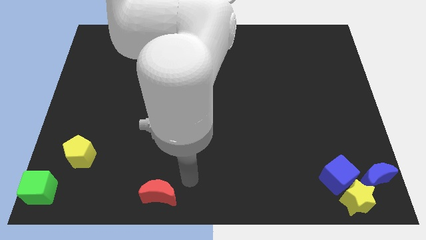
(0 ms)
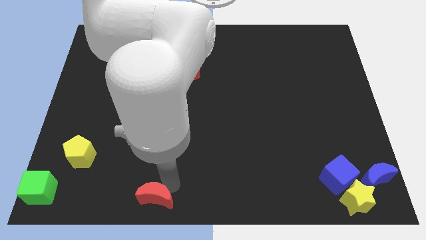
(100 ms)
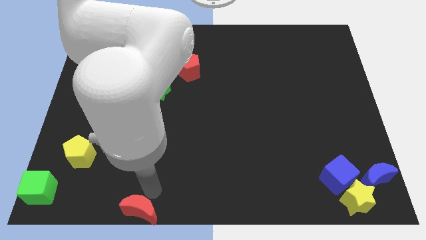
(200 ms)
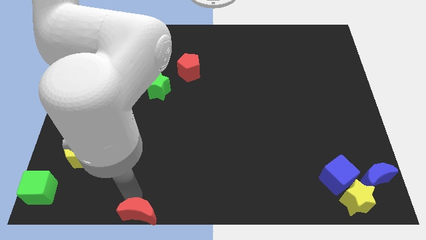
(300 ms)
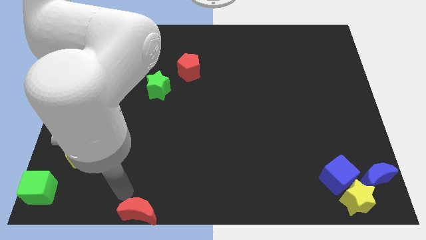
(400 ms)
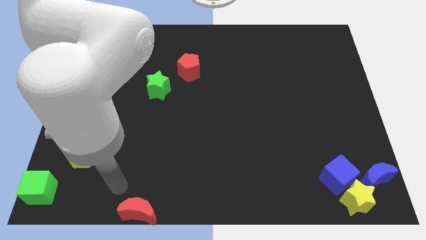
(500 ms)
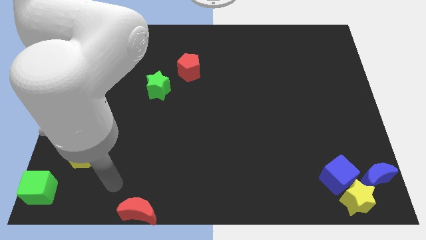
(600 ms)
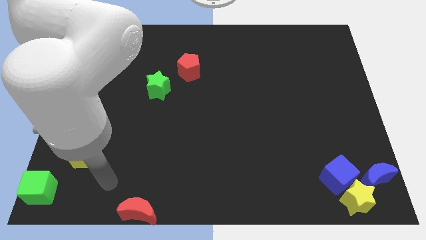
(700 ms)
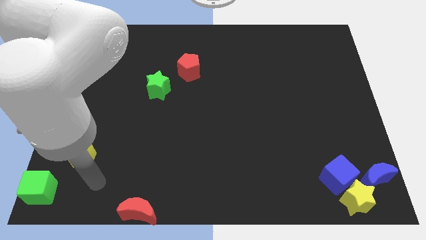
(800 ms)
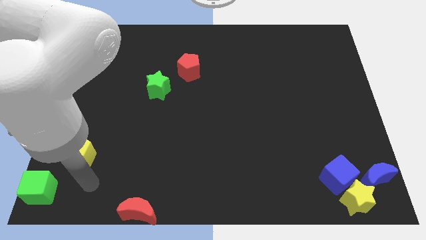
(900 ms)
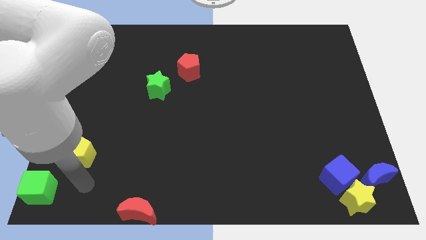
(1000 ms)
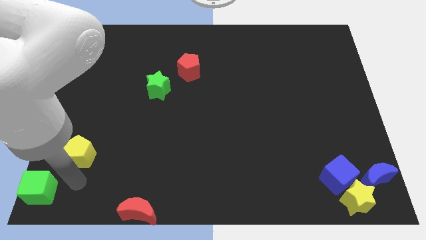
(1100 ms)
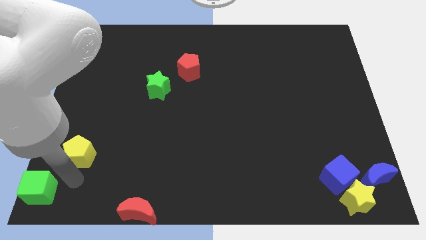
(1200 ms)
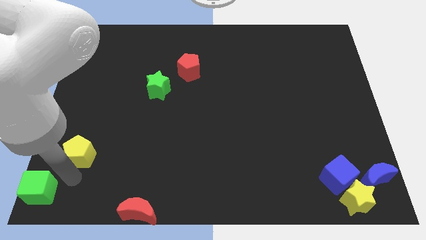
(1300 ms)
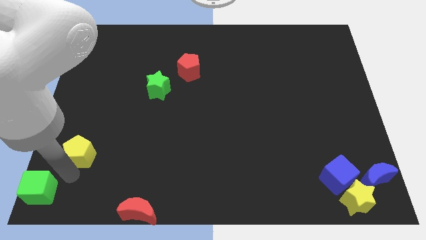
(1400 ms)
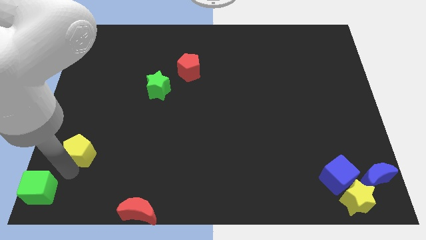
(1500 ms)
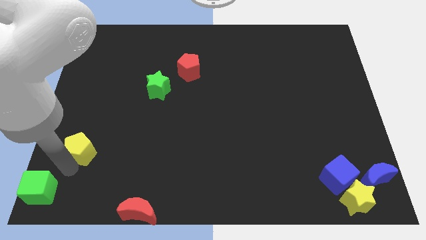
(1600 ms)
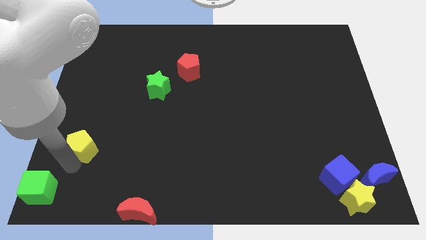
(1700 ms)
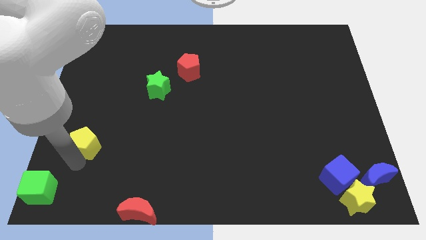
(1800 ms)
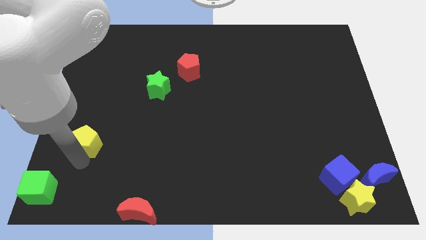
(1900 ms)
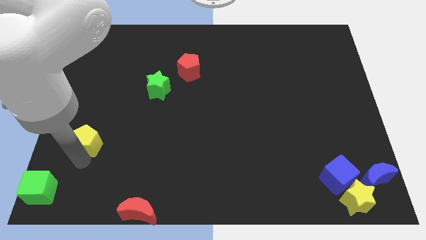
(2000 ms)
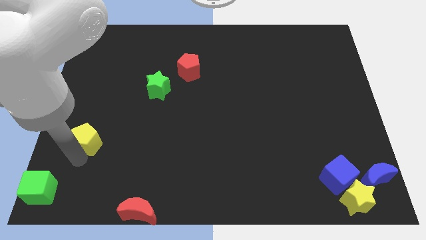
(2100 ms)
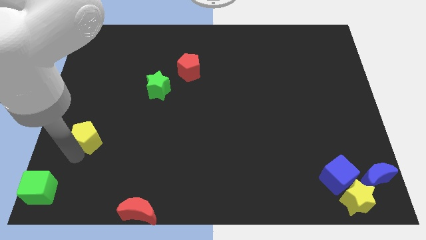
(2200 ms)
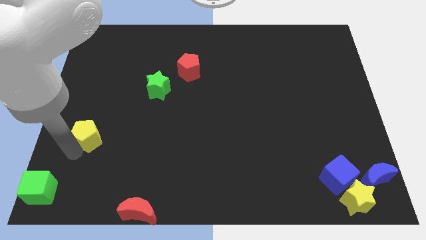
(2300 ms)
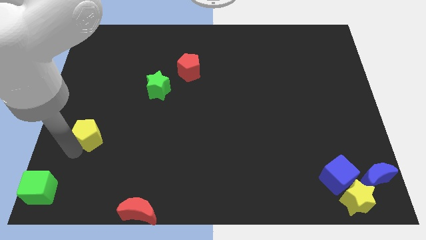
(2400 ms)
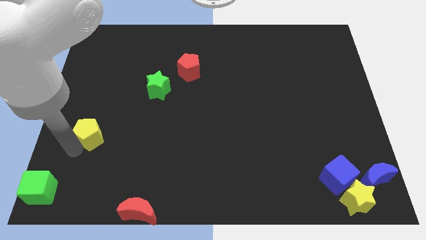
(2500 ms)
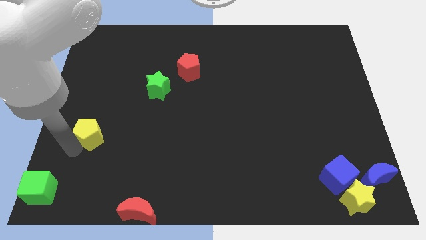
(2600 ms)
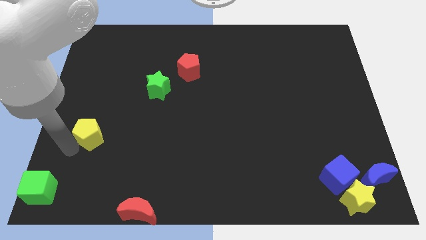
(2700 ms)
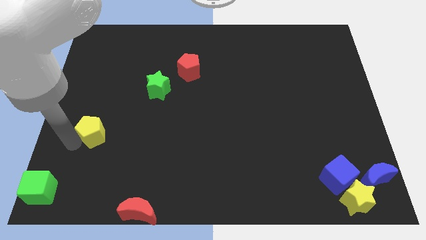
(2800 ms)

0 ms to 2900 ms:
place yellow pentagon in between green cube and green star

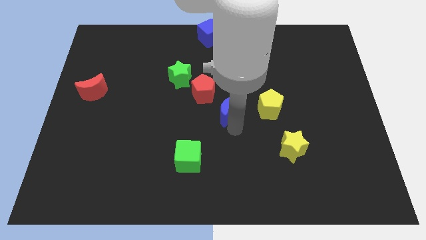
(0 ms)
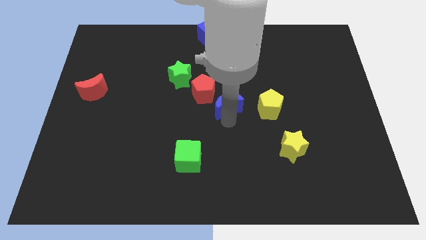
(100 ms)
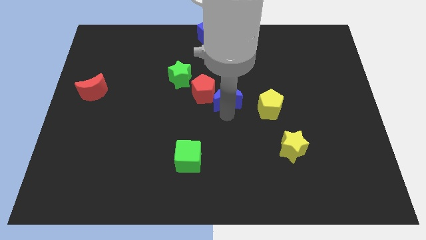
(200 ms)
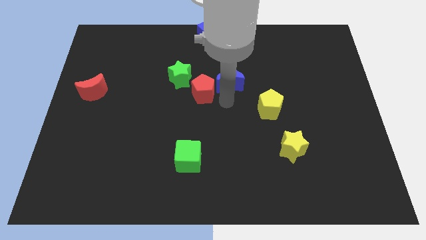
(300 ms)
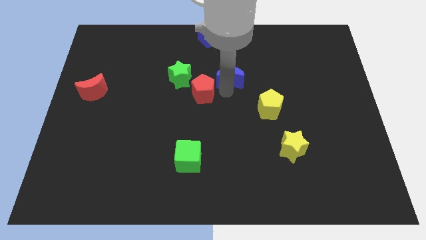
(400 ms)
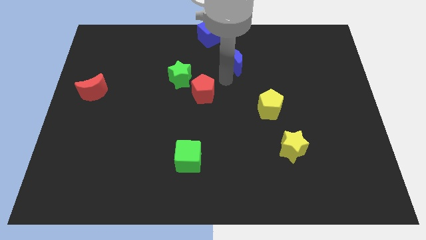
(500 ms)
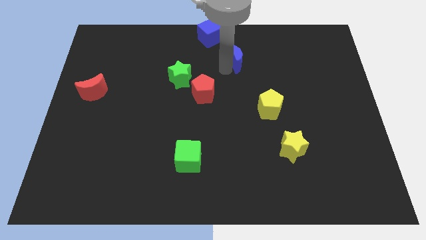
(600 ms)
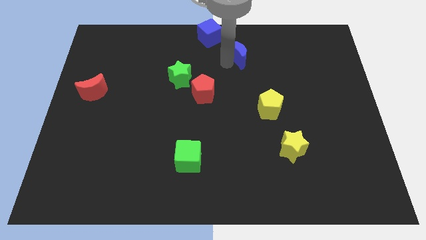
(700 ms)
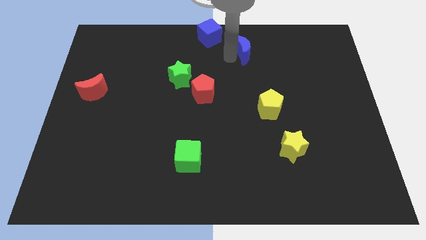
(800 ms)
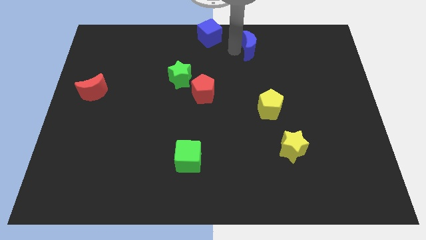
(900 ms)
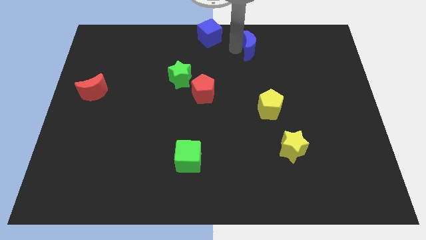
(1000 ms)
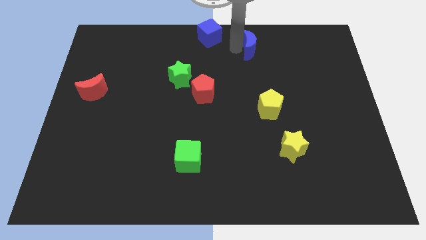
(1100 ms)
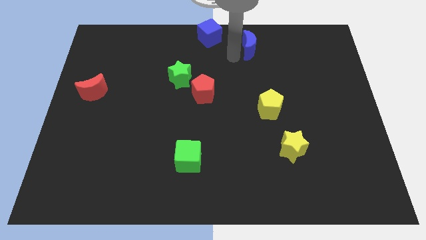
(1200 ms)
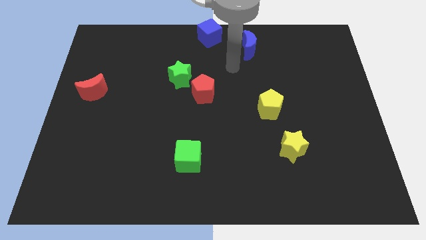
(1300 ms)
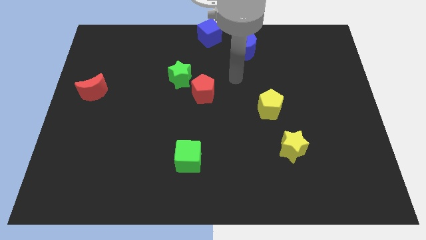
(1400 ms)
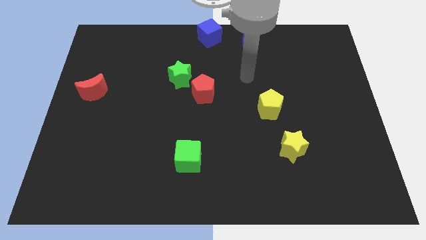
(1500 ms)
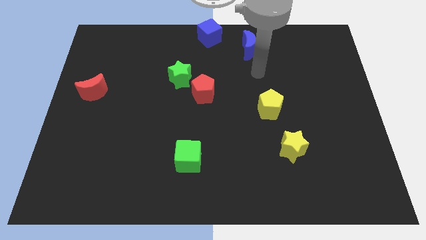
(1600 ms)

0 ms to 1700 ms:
move blue moon towards the top center of the board

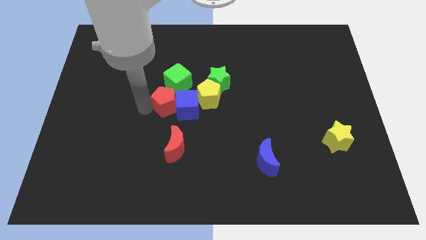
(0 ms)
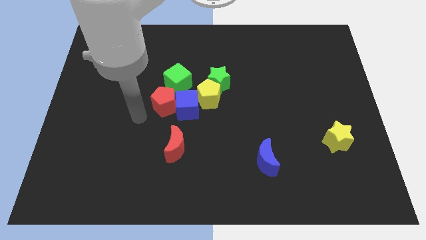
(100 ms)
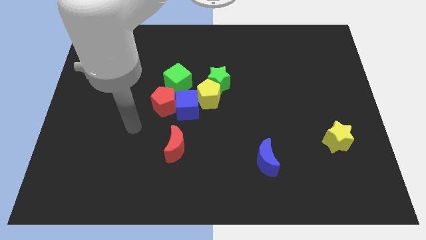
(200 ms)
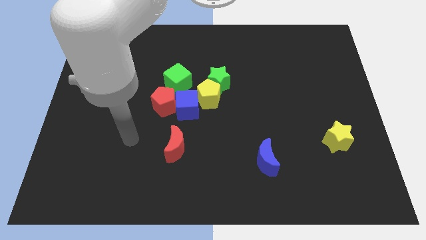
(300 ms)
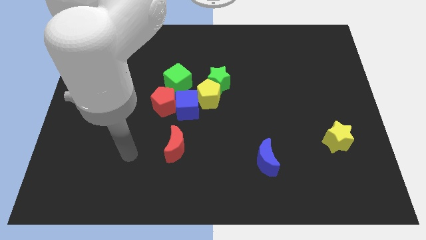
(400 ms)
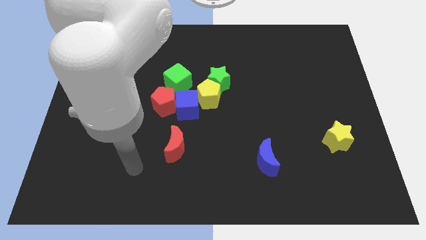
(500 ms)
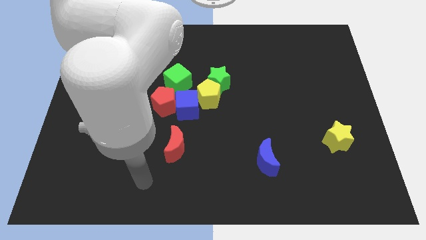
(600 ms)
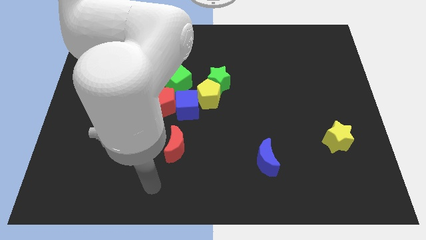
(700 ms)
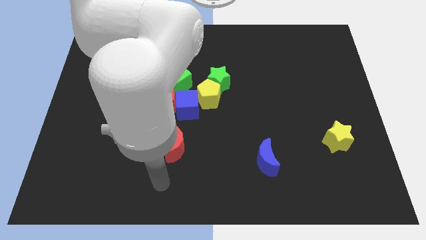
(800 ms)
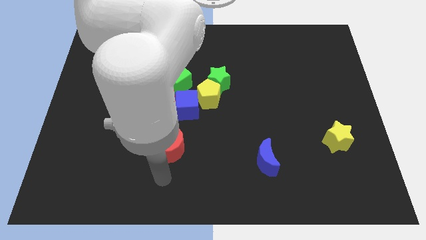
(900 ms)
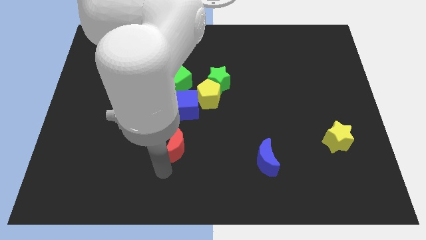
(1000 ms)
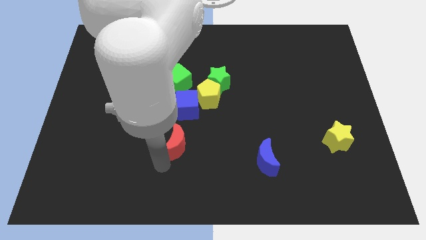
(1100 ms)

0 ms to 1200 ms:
move the arm to bottom left of the board

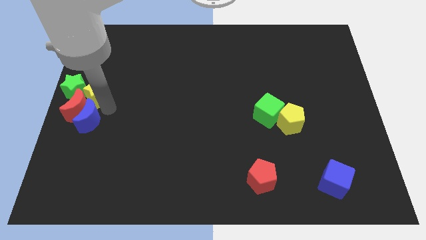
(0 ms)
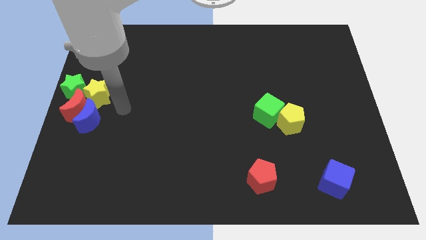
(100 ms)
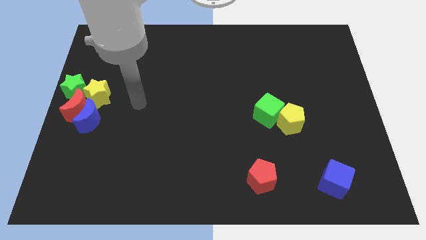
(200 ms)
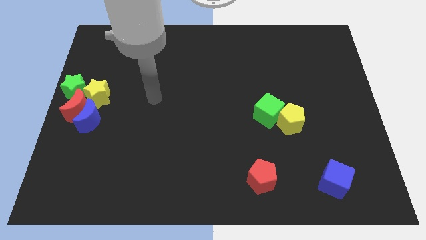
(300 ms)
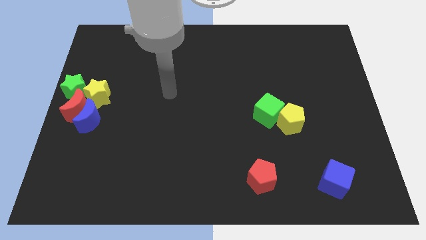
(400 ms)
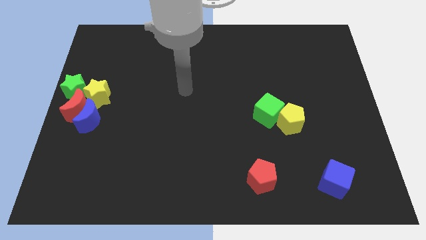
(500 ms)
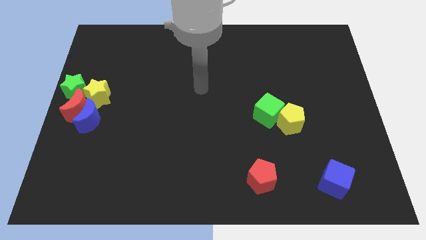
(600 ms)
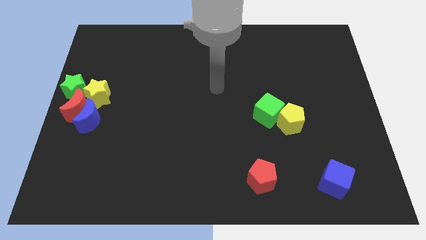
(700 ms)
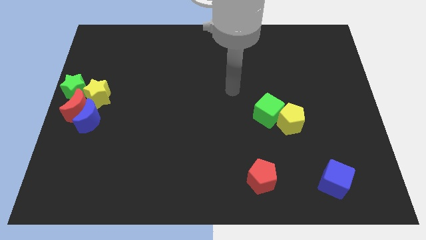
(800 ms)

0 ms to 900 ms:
move the arm away from the blue moon

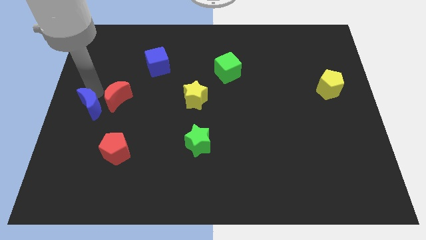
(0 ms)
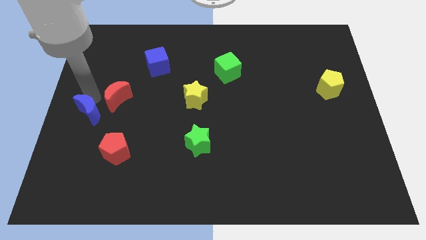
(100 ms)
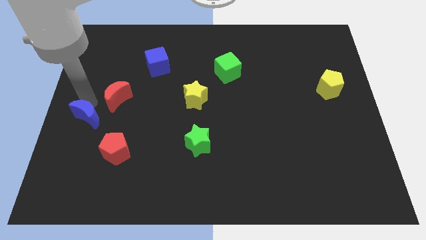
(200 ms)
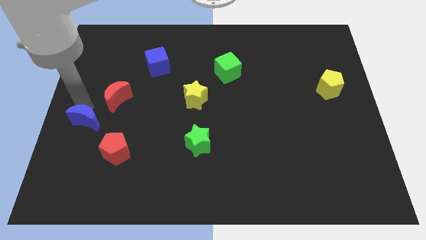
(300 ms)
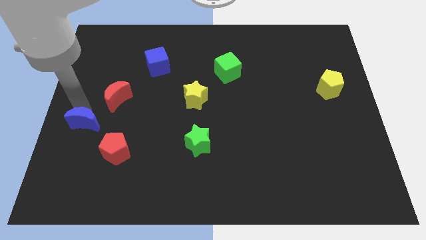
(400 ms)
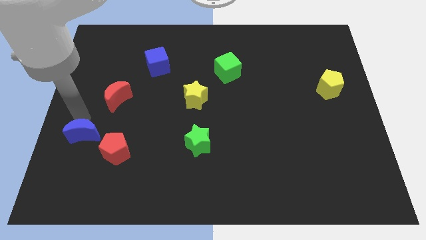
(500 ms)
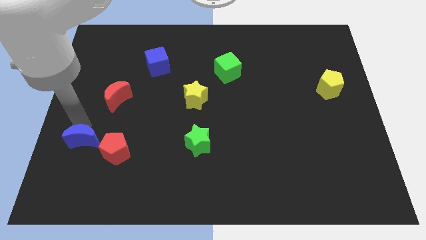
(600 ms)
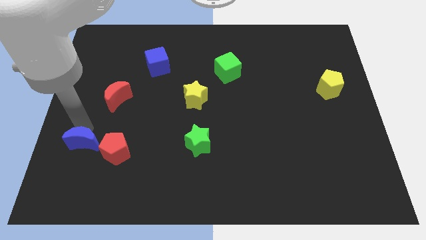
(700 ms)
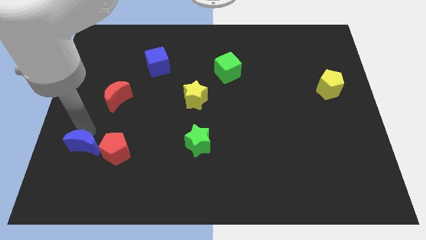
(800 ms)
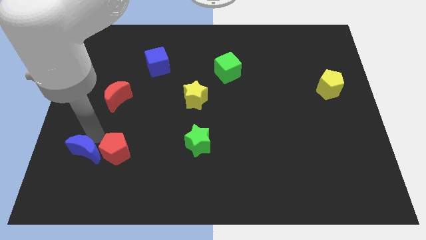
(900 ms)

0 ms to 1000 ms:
place the blue crescent left to the red pentagon

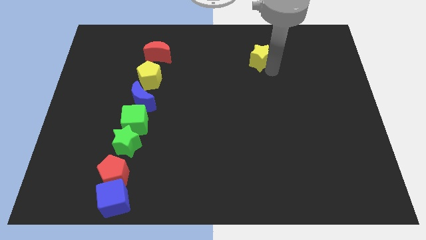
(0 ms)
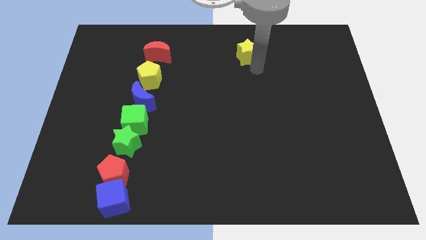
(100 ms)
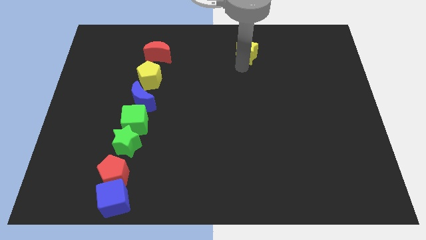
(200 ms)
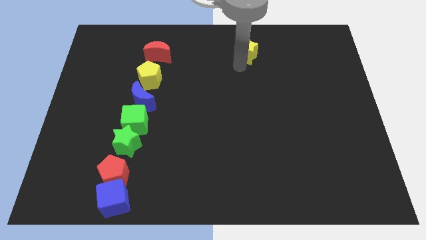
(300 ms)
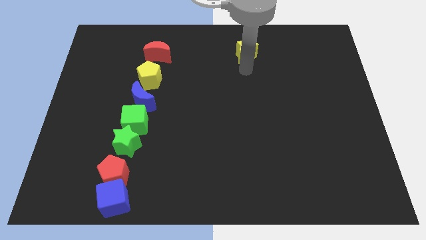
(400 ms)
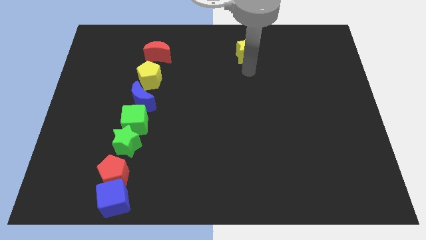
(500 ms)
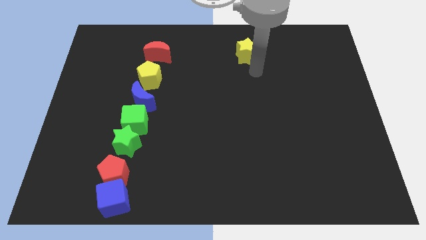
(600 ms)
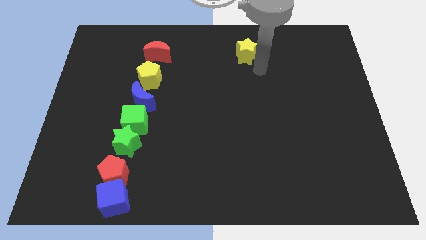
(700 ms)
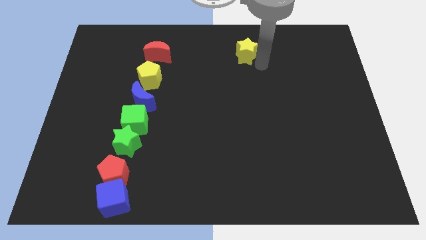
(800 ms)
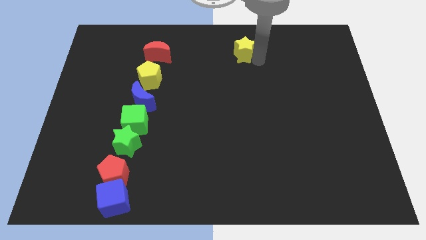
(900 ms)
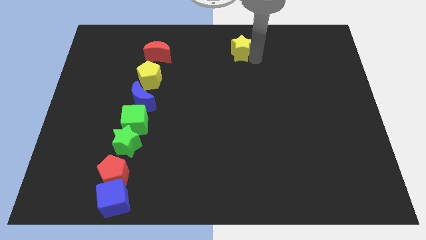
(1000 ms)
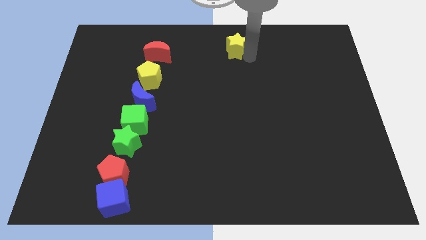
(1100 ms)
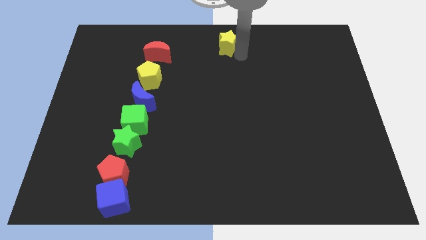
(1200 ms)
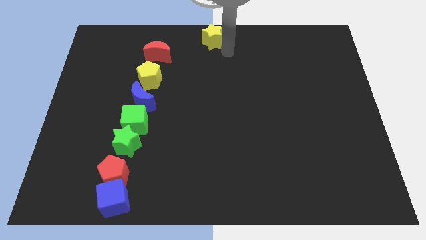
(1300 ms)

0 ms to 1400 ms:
move the yellow star to the top center
